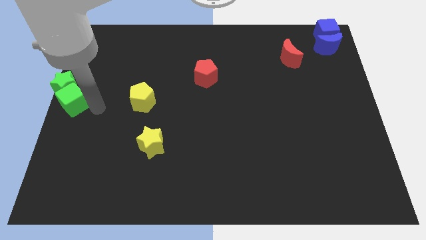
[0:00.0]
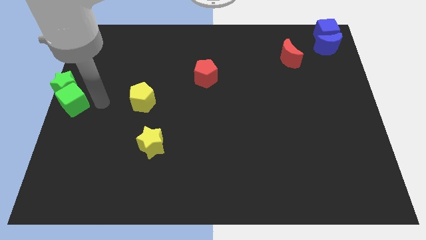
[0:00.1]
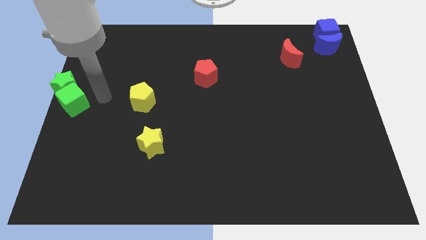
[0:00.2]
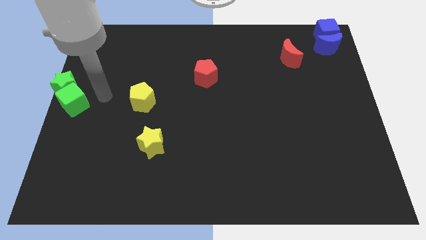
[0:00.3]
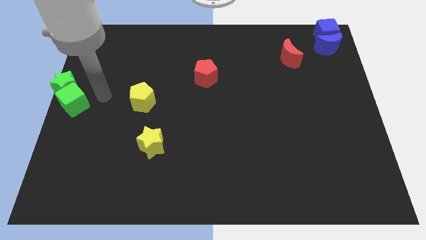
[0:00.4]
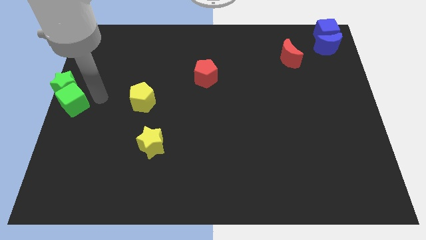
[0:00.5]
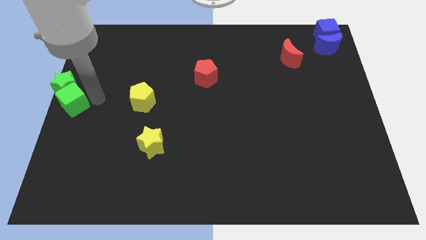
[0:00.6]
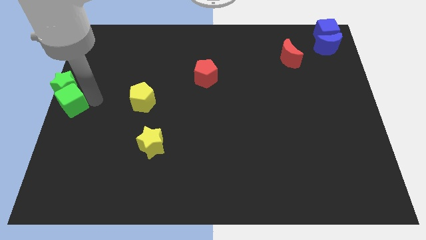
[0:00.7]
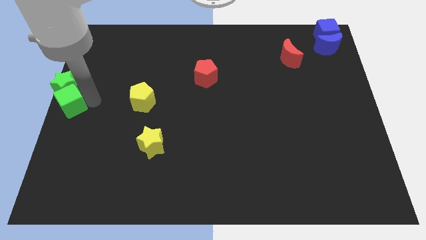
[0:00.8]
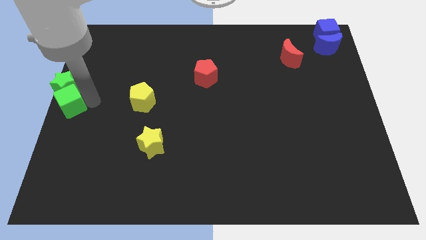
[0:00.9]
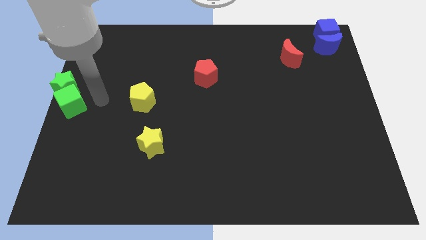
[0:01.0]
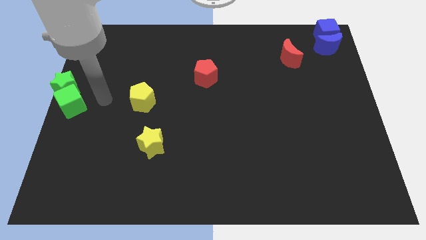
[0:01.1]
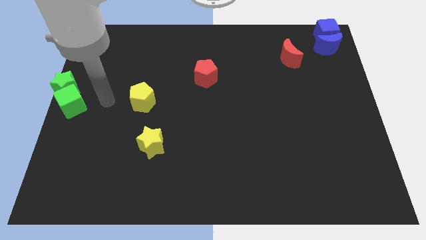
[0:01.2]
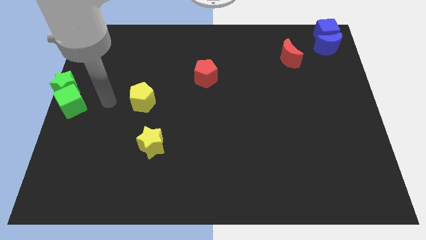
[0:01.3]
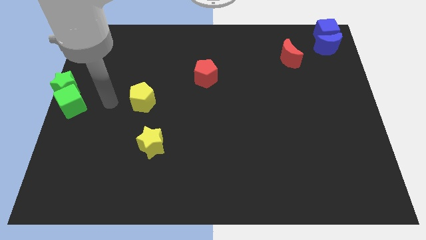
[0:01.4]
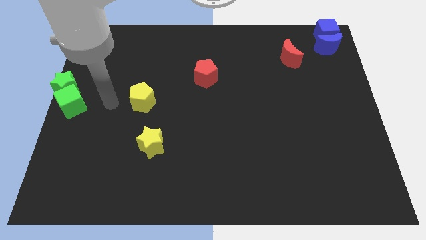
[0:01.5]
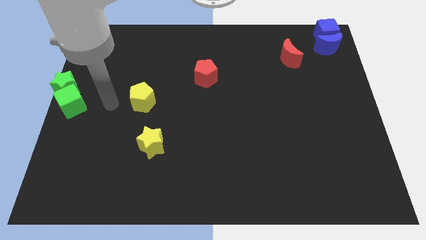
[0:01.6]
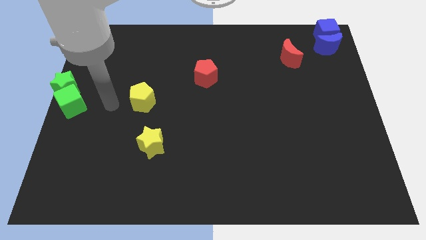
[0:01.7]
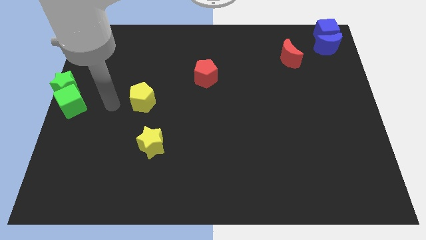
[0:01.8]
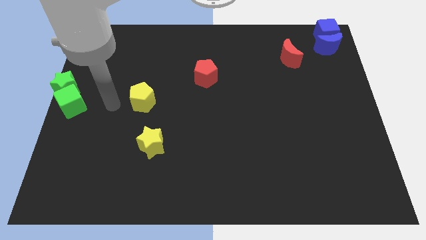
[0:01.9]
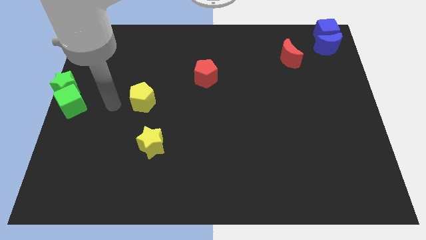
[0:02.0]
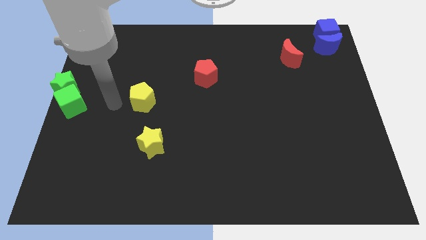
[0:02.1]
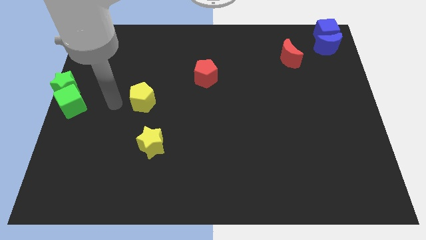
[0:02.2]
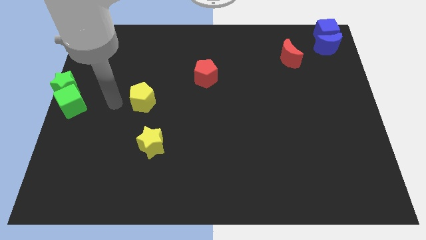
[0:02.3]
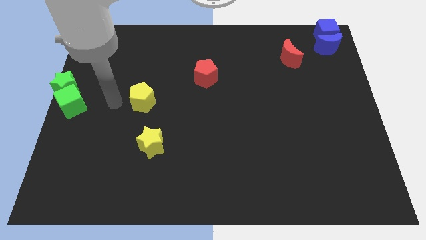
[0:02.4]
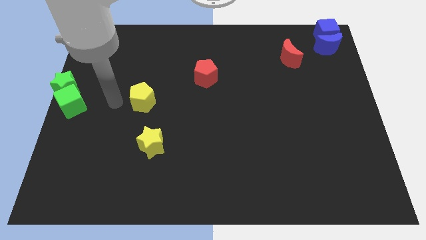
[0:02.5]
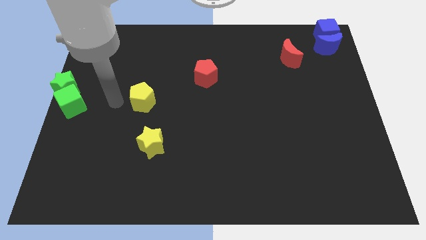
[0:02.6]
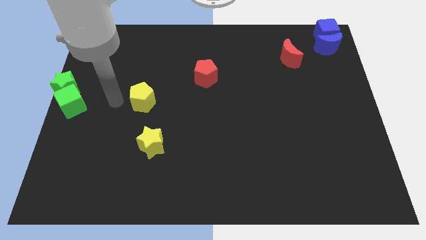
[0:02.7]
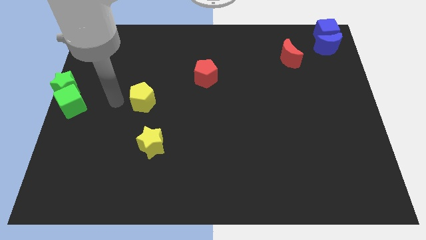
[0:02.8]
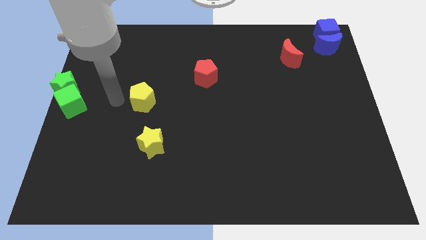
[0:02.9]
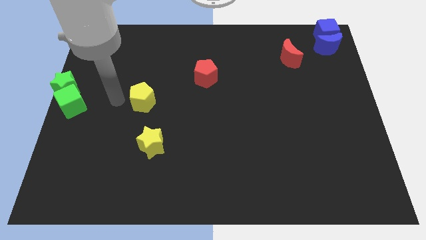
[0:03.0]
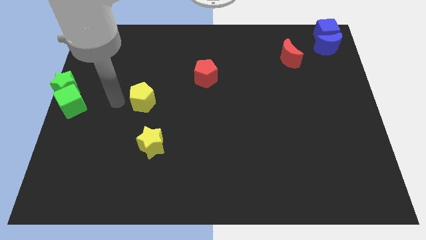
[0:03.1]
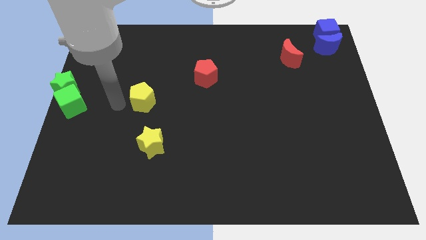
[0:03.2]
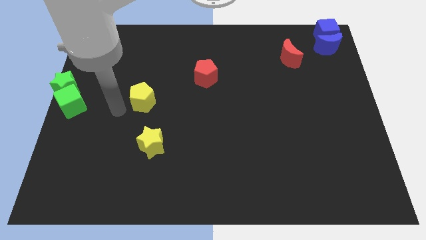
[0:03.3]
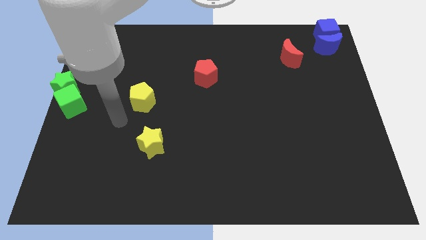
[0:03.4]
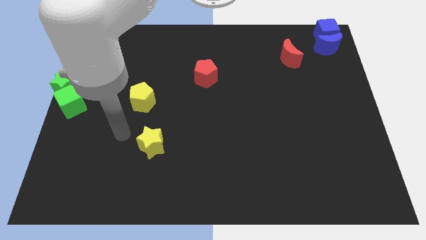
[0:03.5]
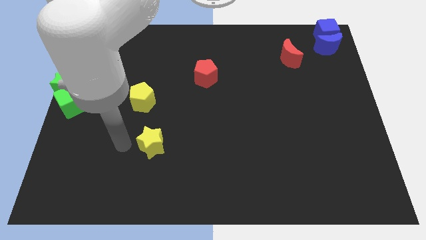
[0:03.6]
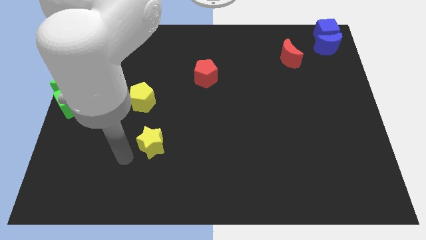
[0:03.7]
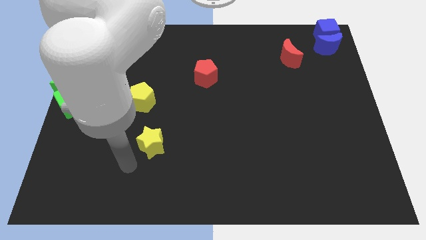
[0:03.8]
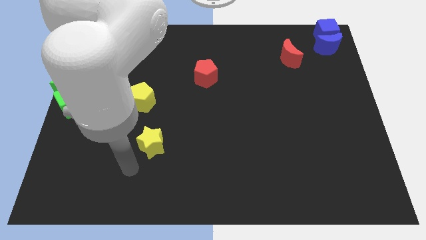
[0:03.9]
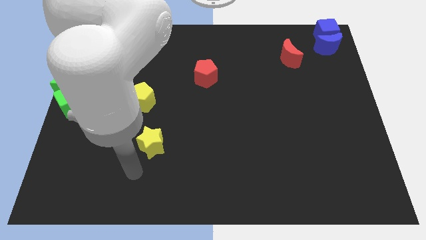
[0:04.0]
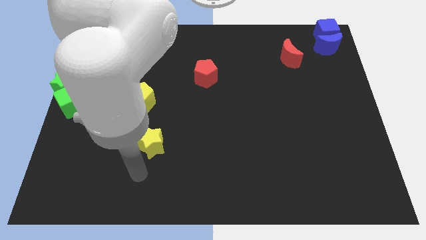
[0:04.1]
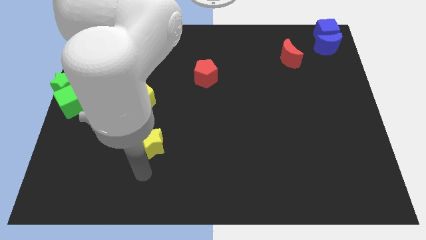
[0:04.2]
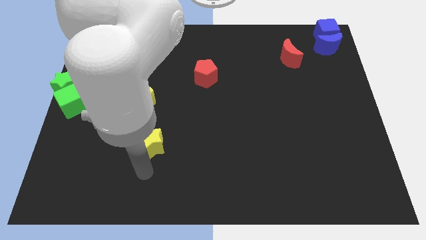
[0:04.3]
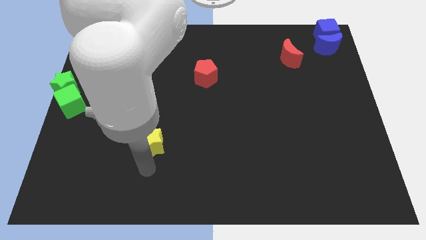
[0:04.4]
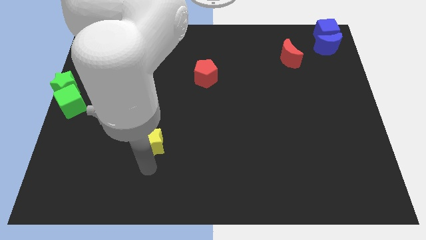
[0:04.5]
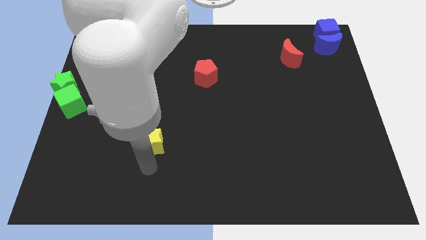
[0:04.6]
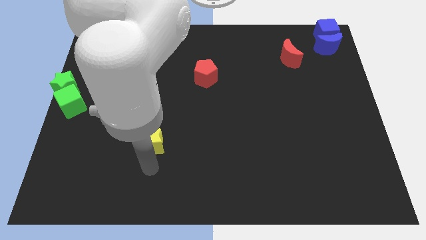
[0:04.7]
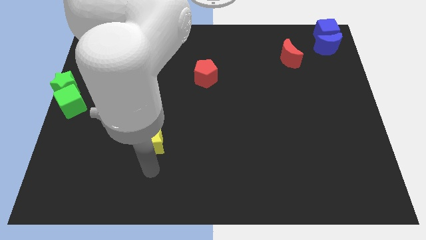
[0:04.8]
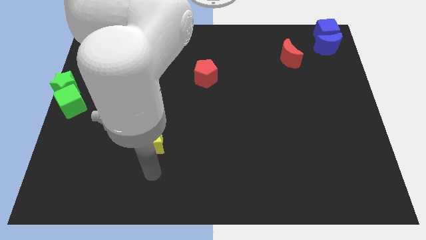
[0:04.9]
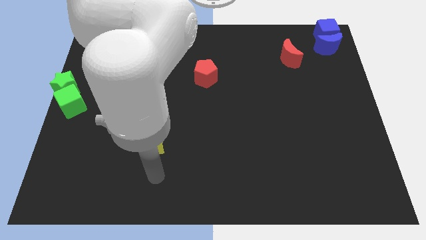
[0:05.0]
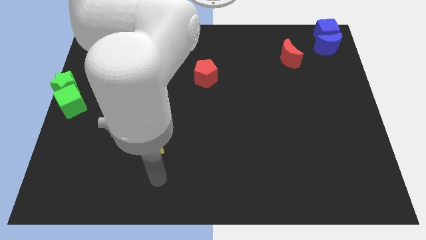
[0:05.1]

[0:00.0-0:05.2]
point your hand below the yellow star

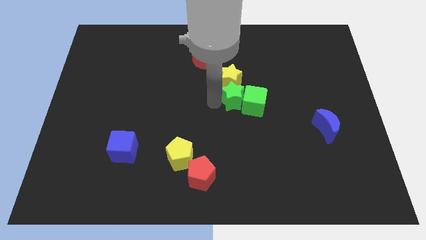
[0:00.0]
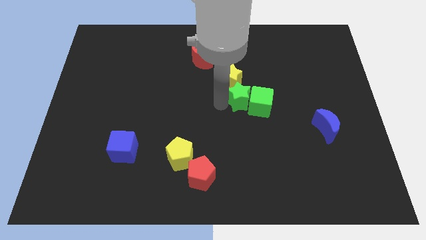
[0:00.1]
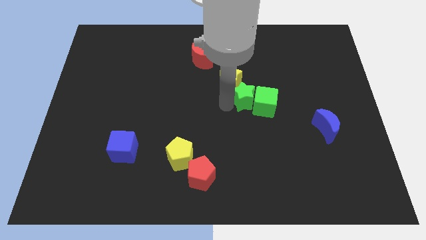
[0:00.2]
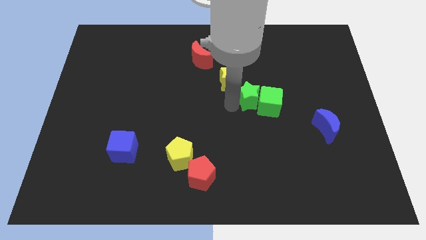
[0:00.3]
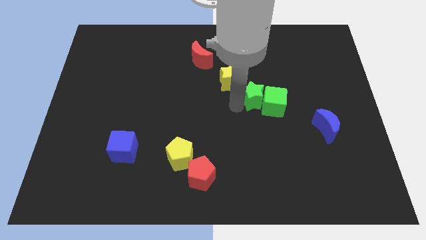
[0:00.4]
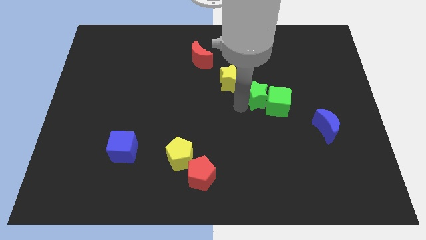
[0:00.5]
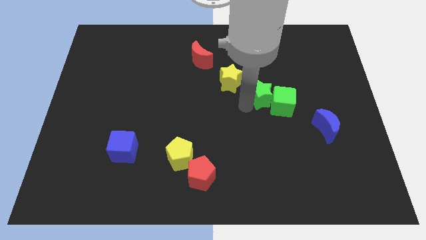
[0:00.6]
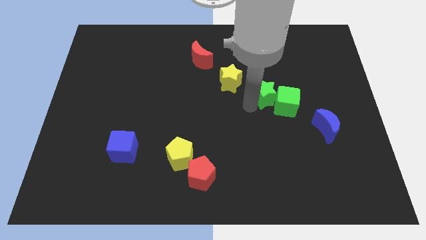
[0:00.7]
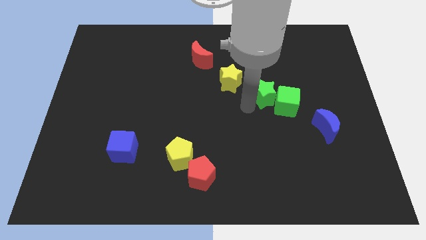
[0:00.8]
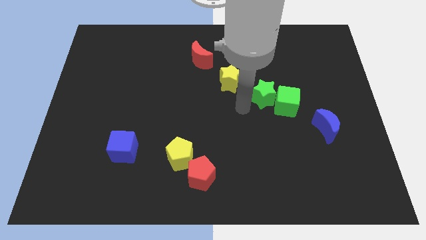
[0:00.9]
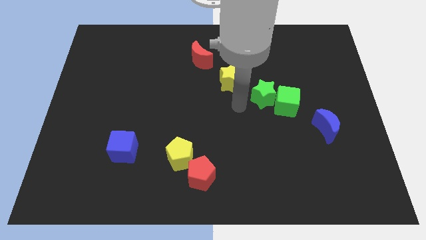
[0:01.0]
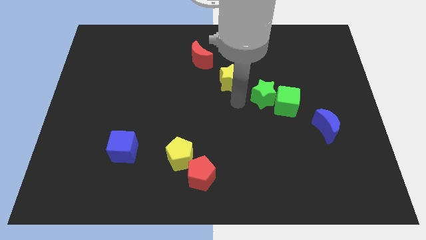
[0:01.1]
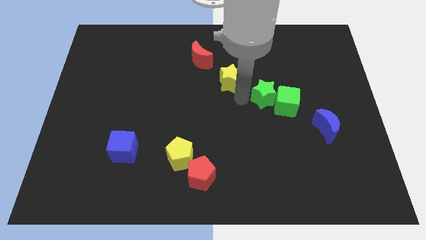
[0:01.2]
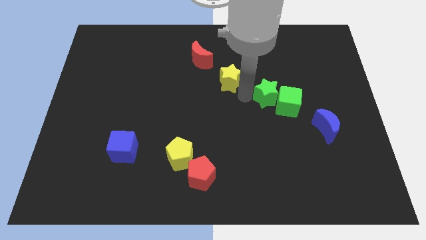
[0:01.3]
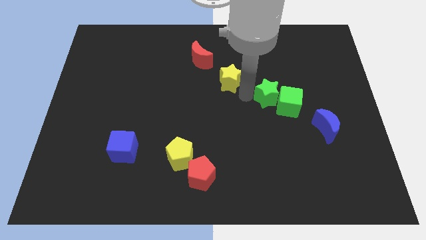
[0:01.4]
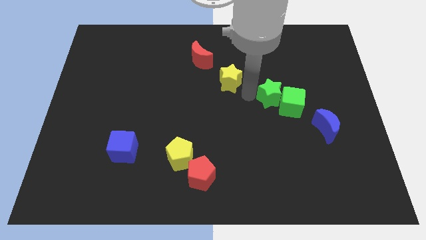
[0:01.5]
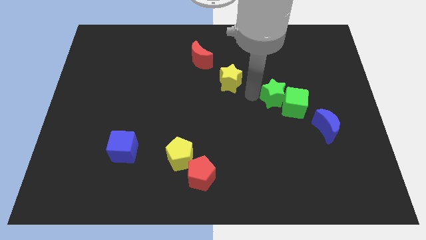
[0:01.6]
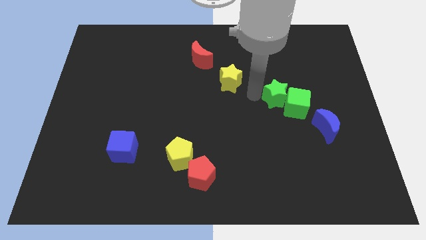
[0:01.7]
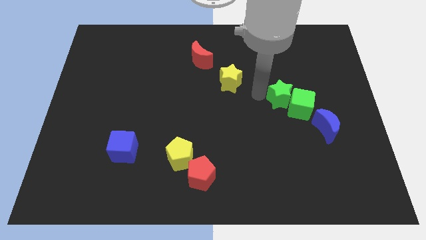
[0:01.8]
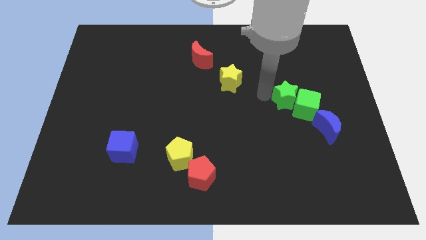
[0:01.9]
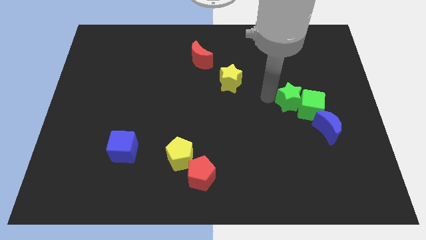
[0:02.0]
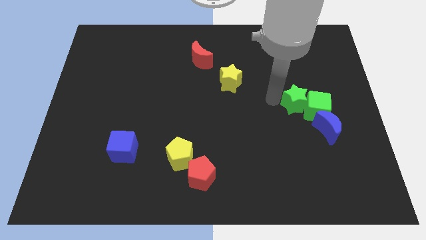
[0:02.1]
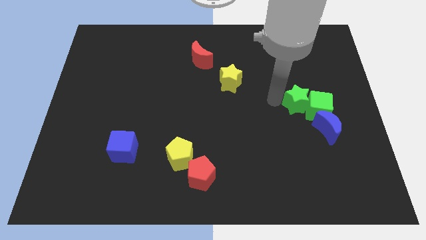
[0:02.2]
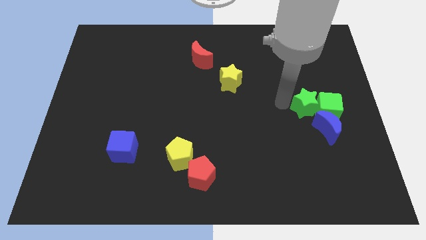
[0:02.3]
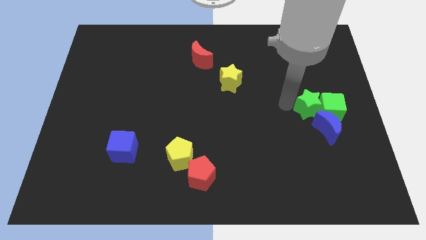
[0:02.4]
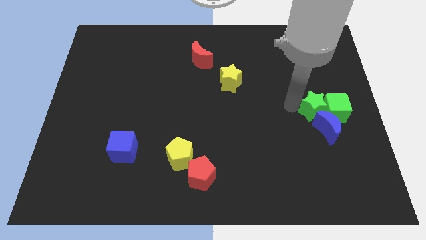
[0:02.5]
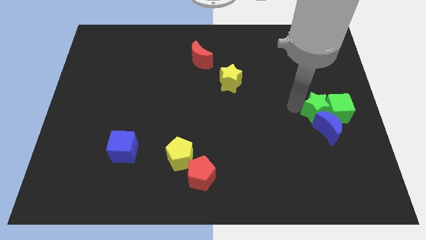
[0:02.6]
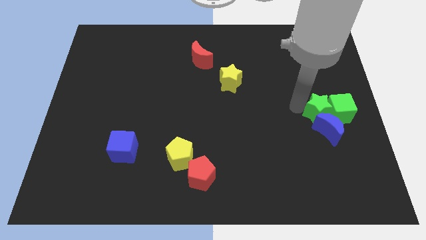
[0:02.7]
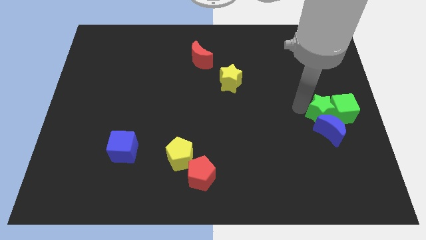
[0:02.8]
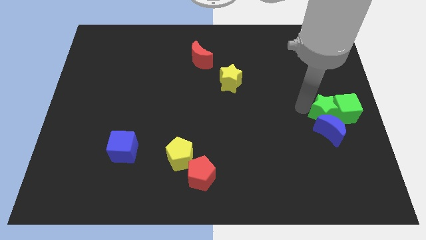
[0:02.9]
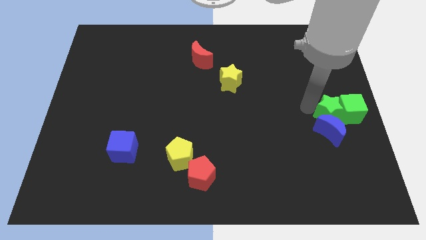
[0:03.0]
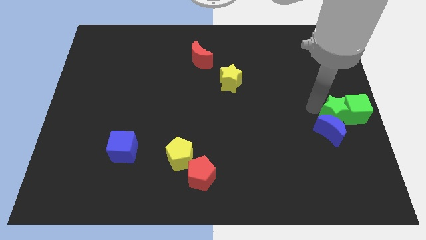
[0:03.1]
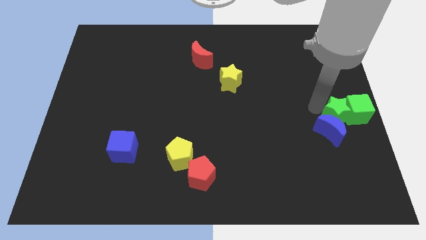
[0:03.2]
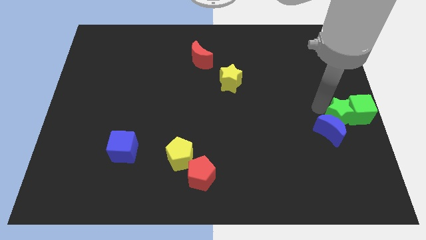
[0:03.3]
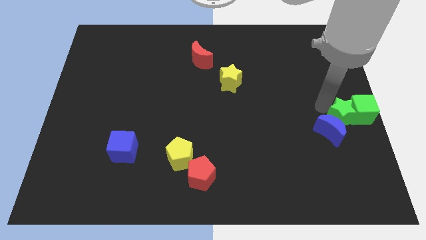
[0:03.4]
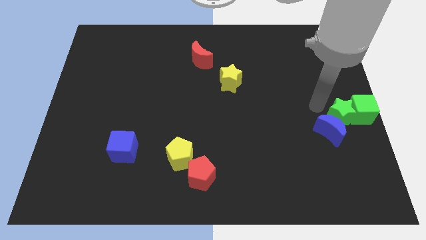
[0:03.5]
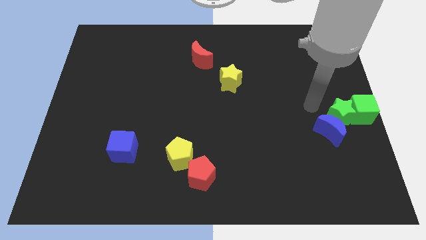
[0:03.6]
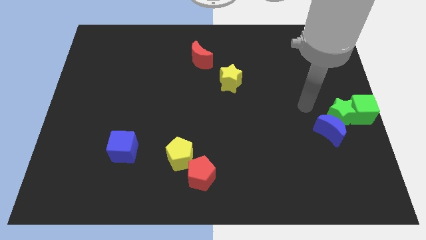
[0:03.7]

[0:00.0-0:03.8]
push the green star along with green cube to the centre right of the board
